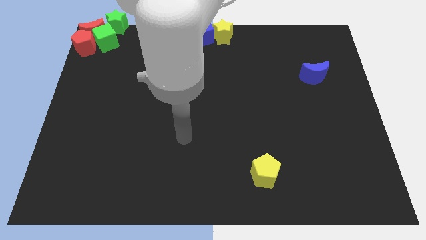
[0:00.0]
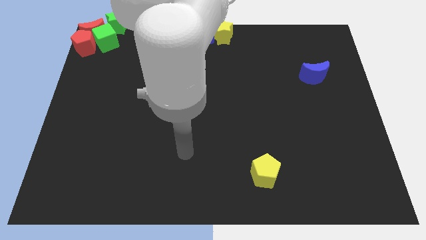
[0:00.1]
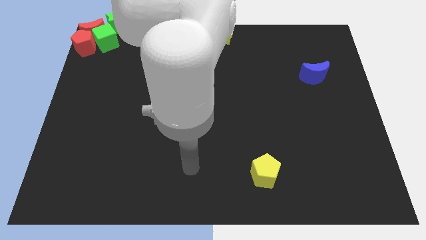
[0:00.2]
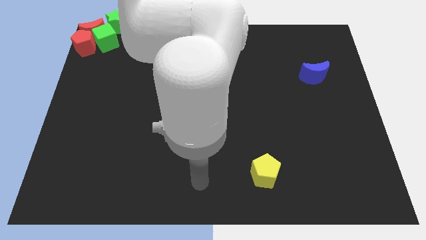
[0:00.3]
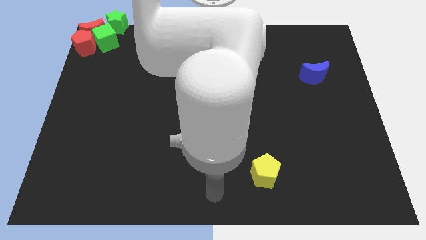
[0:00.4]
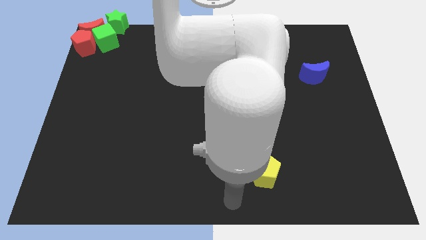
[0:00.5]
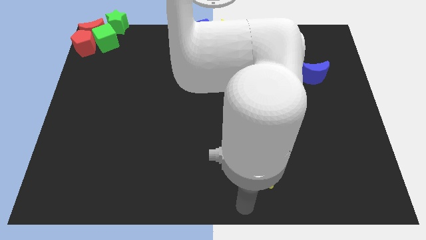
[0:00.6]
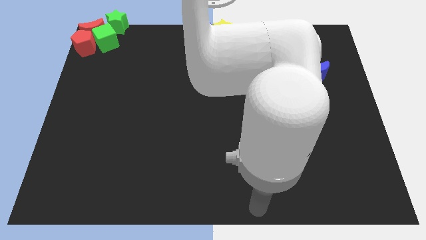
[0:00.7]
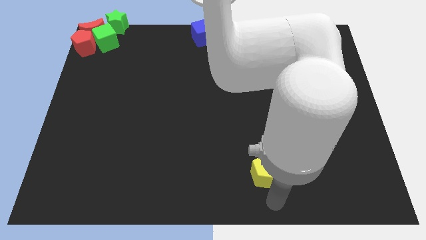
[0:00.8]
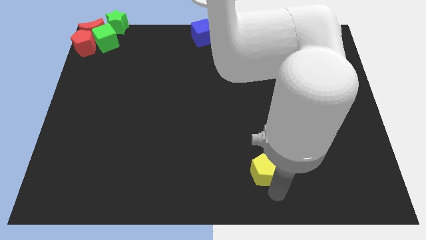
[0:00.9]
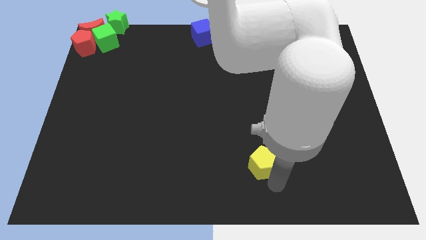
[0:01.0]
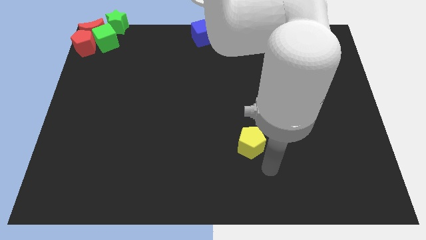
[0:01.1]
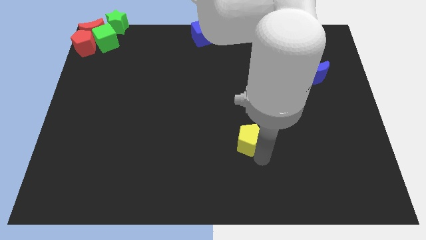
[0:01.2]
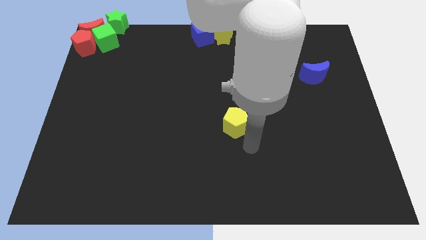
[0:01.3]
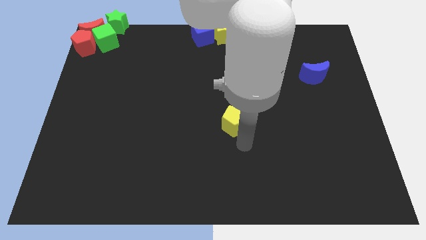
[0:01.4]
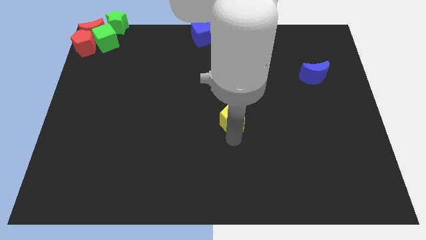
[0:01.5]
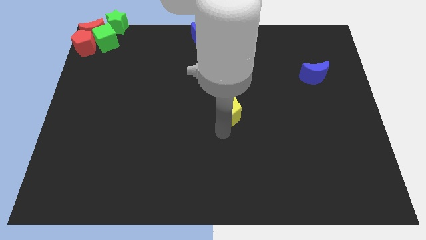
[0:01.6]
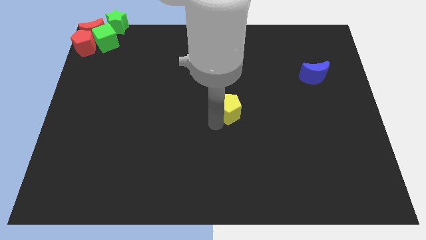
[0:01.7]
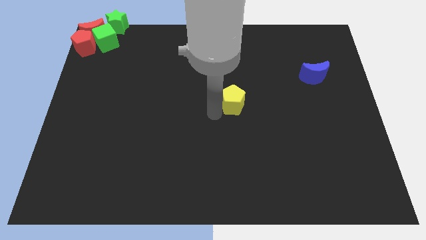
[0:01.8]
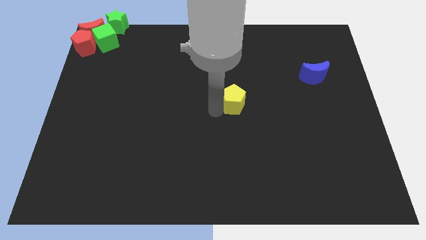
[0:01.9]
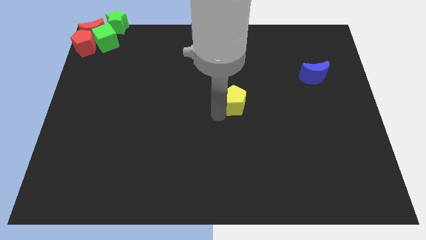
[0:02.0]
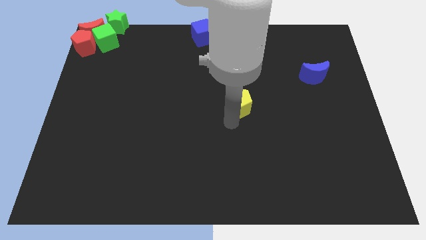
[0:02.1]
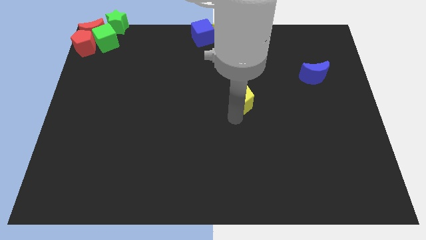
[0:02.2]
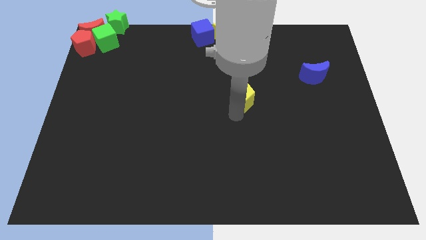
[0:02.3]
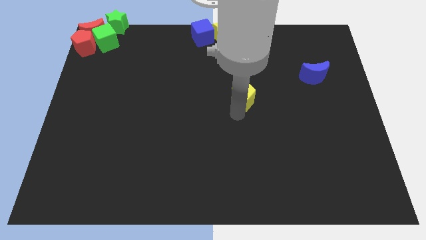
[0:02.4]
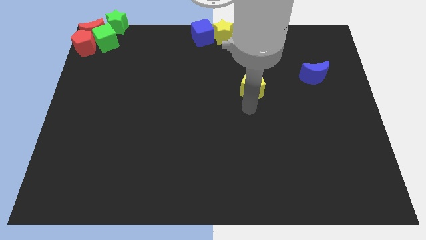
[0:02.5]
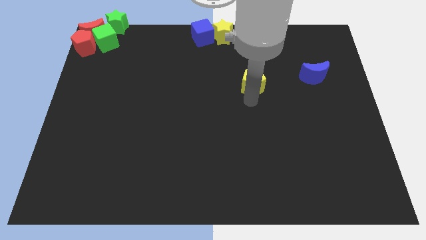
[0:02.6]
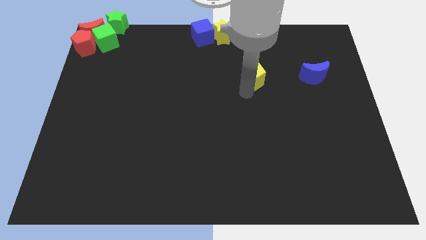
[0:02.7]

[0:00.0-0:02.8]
drag the yellow pentagon towards the top

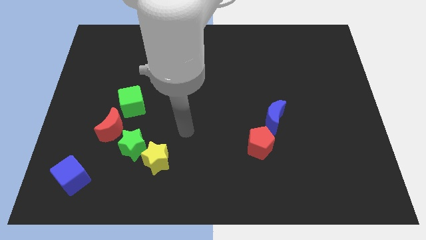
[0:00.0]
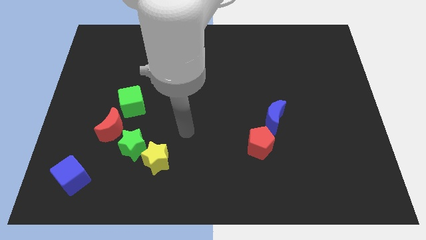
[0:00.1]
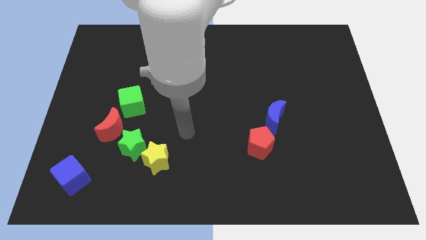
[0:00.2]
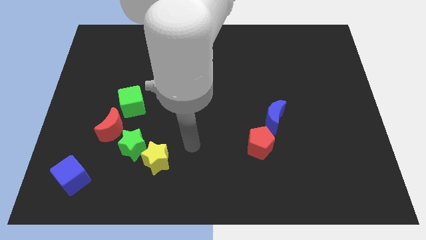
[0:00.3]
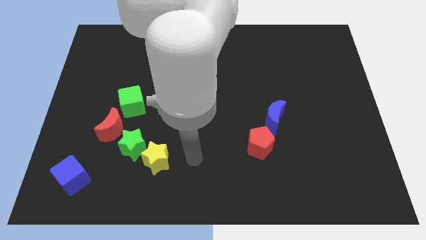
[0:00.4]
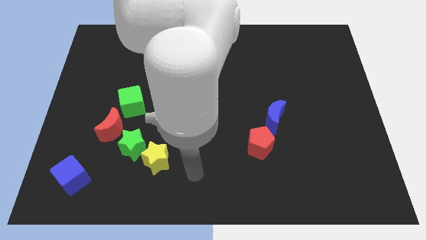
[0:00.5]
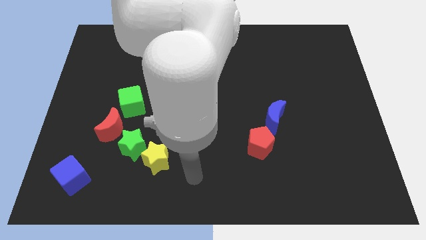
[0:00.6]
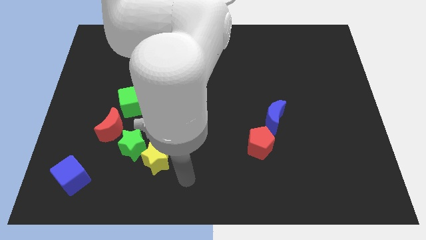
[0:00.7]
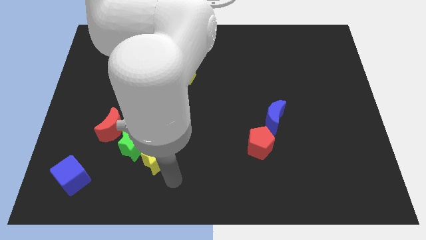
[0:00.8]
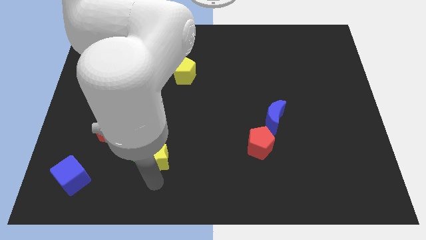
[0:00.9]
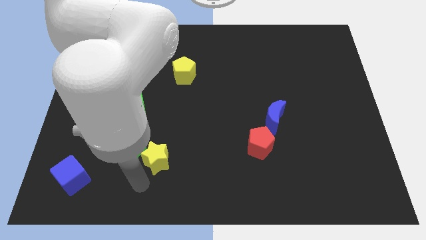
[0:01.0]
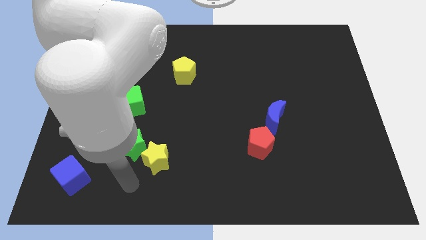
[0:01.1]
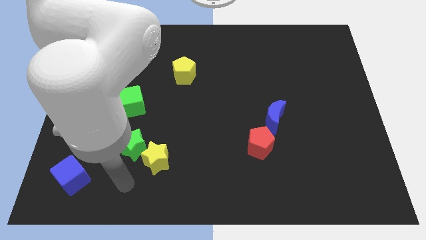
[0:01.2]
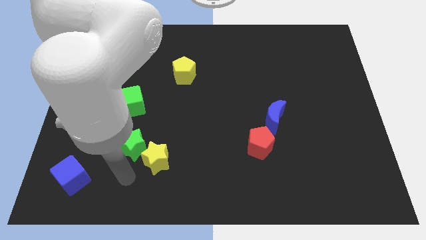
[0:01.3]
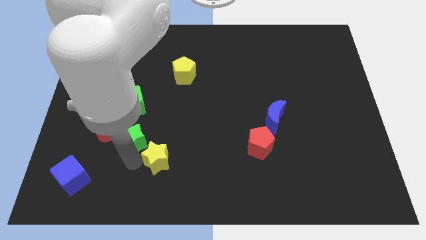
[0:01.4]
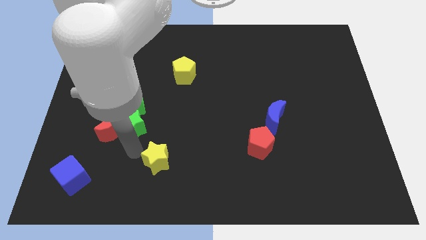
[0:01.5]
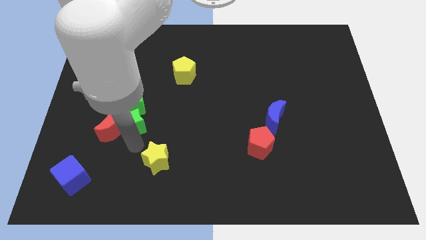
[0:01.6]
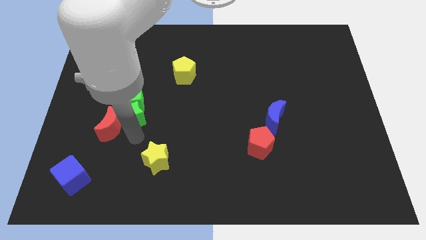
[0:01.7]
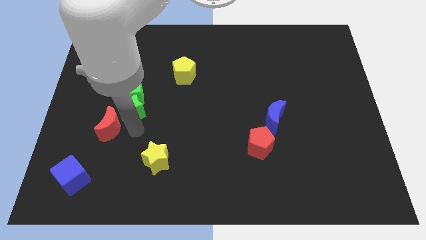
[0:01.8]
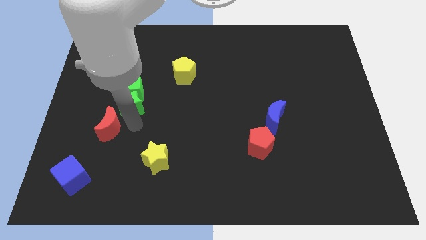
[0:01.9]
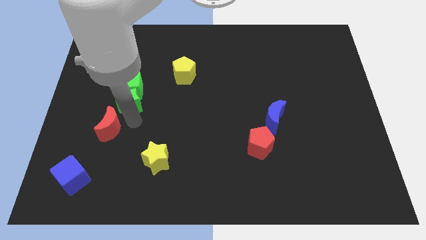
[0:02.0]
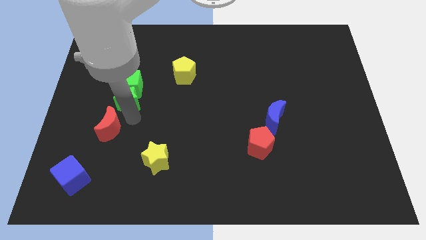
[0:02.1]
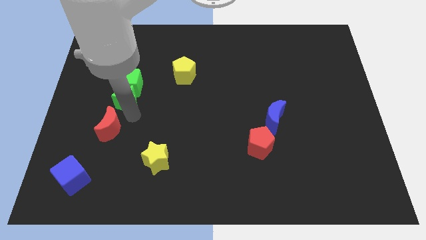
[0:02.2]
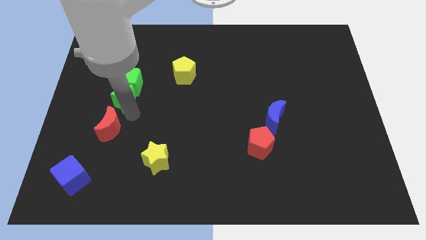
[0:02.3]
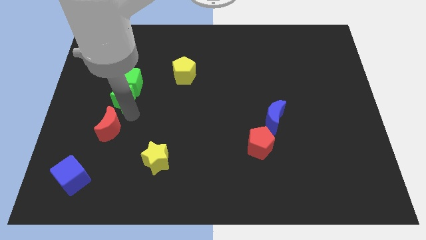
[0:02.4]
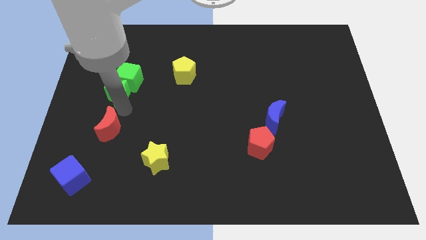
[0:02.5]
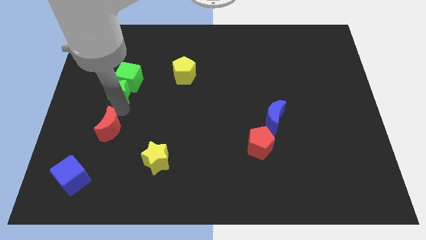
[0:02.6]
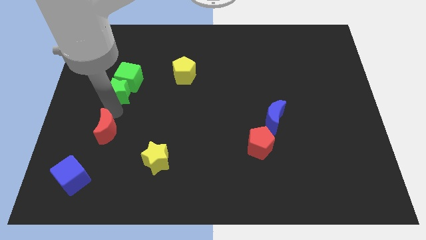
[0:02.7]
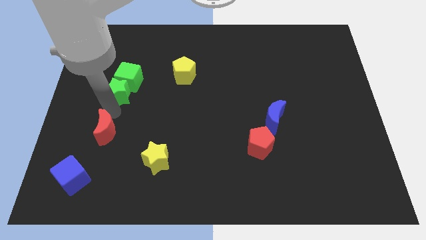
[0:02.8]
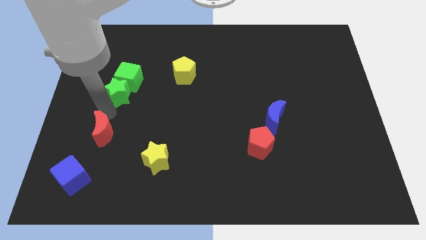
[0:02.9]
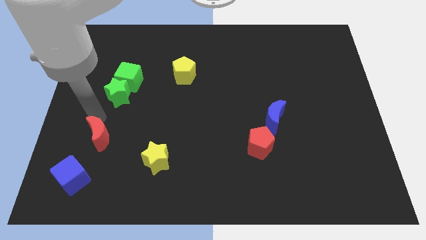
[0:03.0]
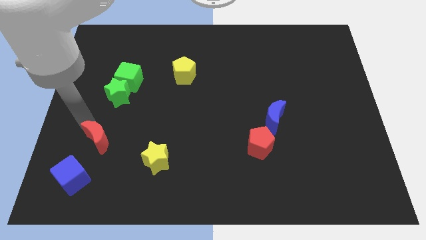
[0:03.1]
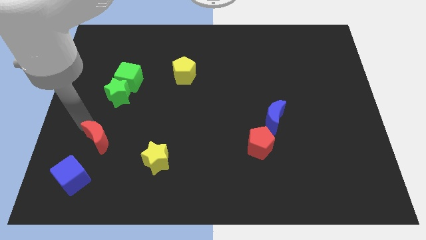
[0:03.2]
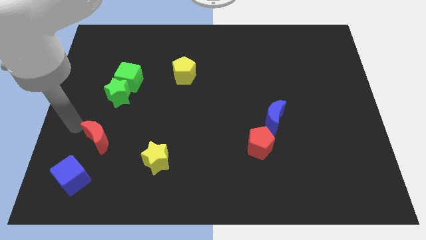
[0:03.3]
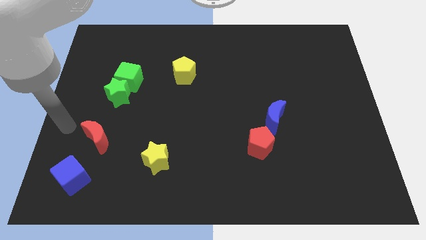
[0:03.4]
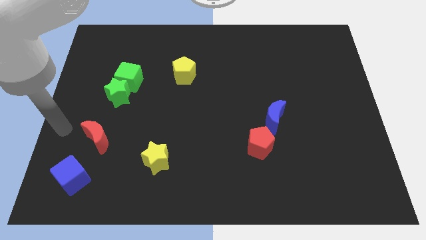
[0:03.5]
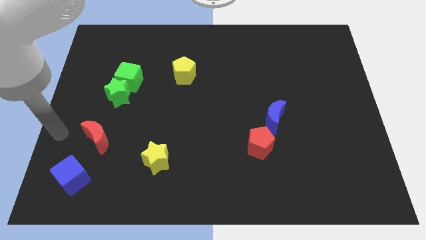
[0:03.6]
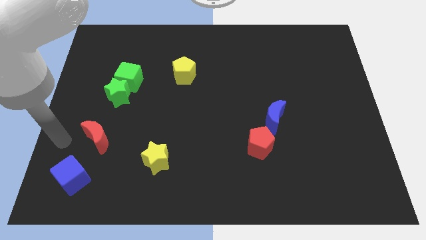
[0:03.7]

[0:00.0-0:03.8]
move the green star and the red crescent in a vertical line

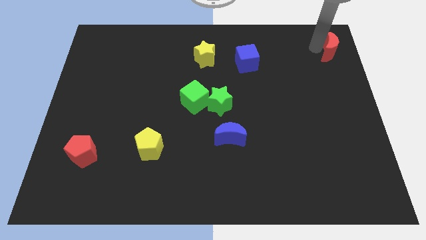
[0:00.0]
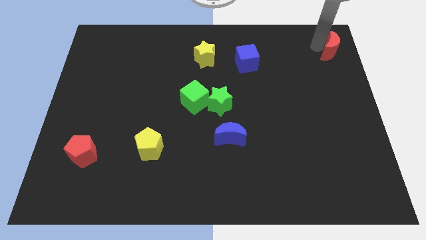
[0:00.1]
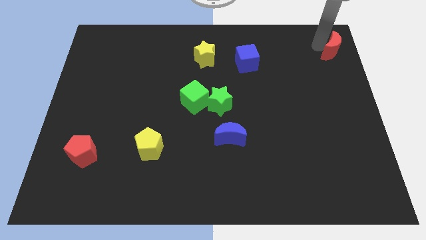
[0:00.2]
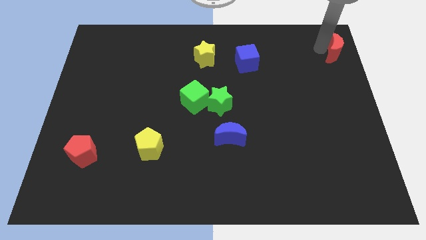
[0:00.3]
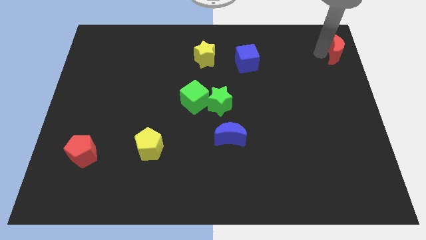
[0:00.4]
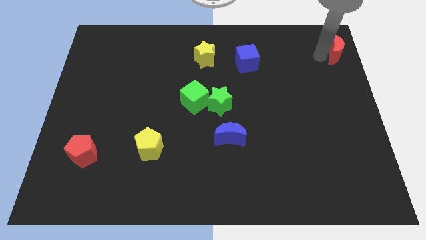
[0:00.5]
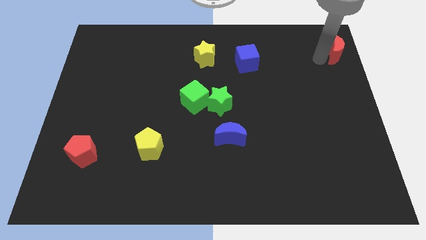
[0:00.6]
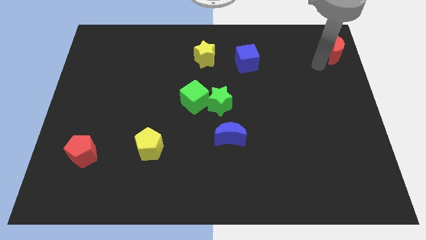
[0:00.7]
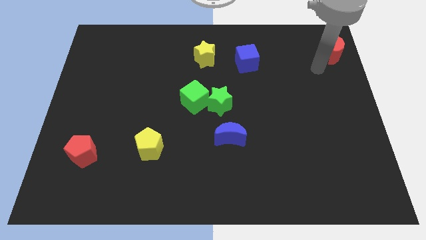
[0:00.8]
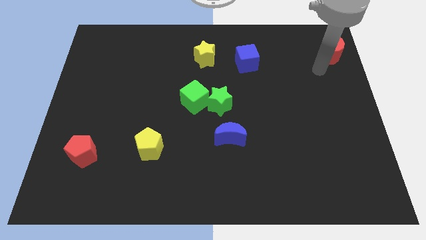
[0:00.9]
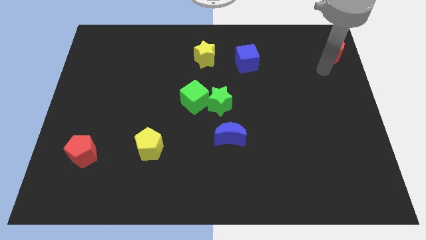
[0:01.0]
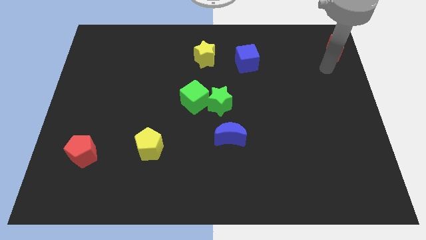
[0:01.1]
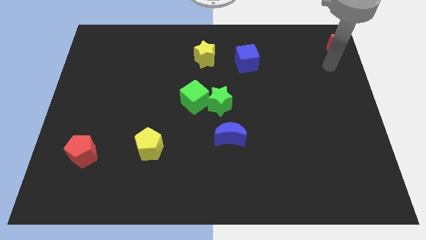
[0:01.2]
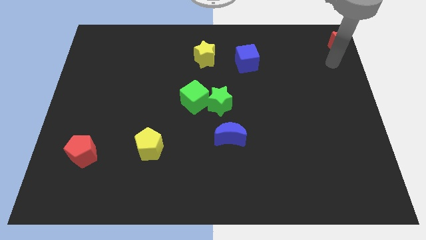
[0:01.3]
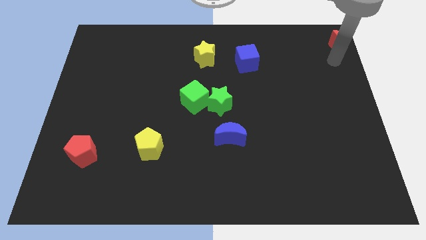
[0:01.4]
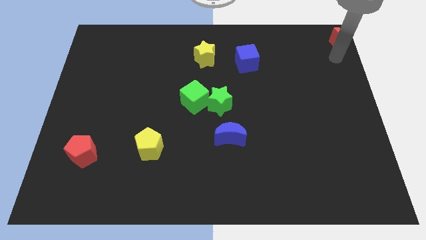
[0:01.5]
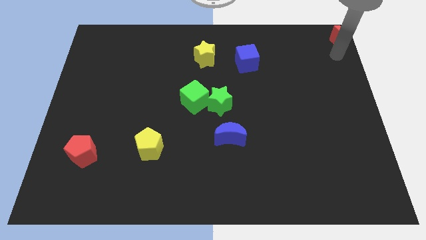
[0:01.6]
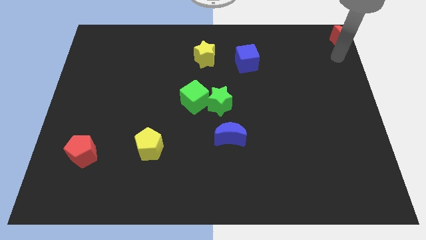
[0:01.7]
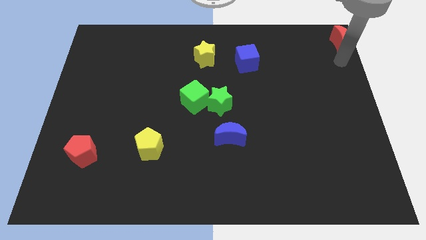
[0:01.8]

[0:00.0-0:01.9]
move the red moon to the top right side

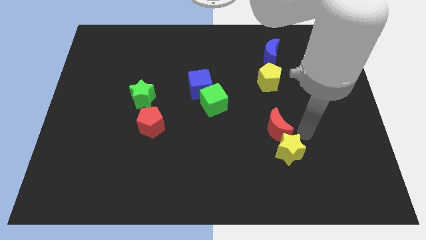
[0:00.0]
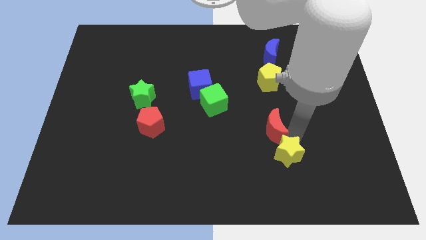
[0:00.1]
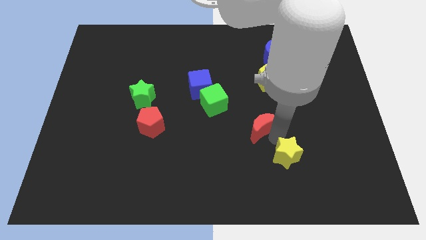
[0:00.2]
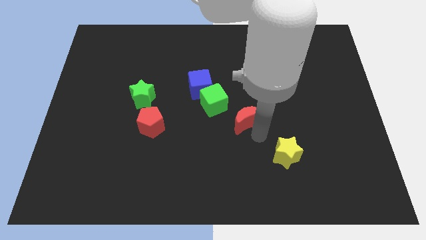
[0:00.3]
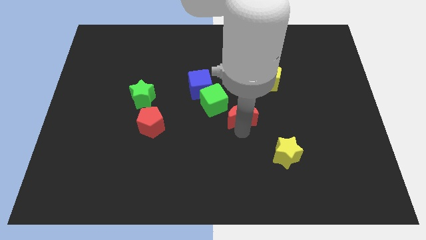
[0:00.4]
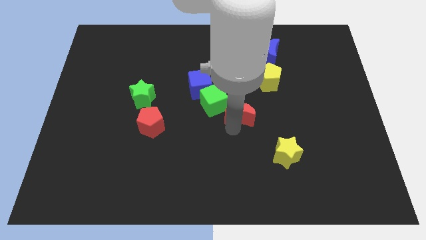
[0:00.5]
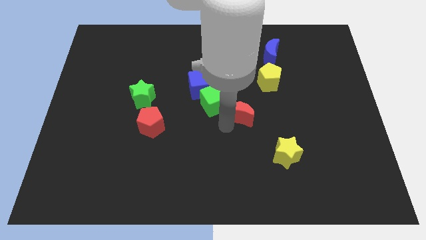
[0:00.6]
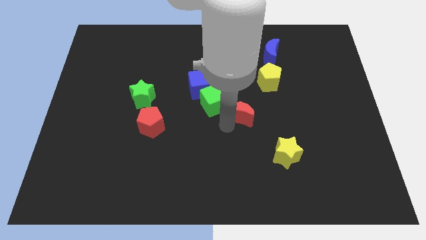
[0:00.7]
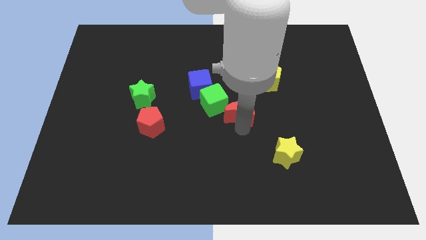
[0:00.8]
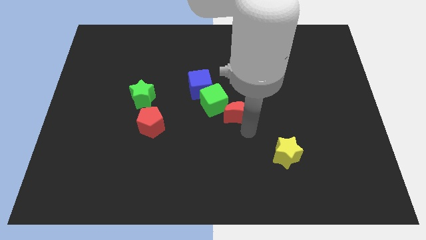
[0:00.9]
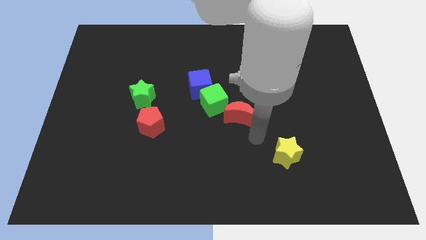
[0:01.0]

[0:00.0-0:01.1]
place red crescent diagonally top left to the yellow star
